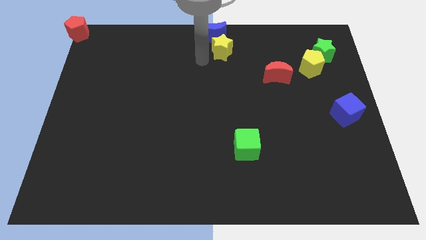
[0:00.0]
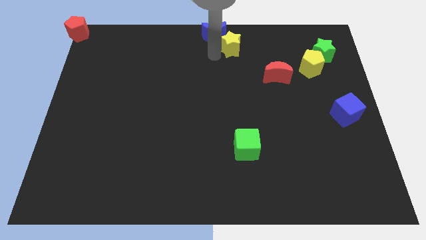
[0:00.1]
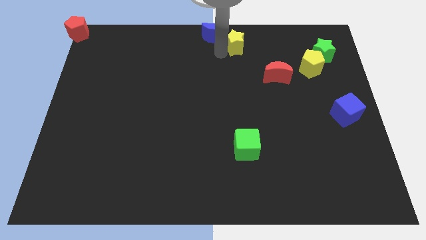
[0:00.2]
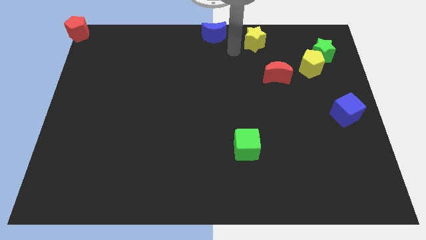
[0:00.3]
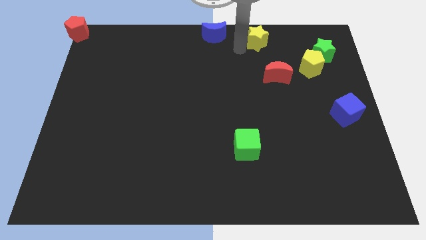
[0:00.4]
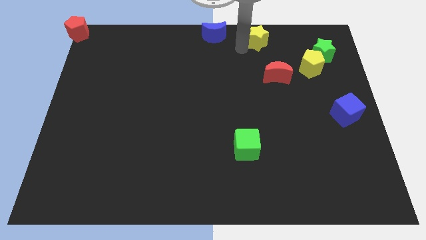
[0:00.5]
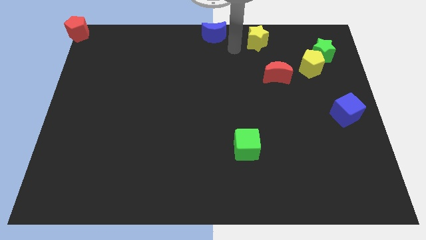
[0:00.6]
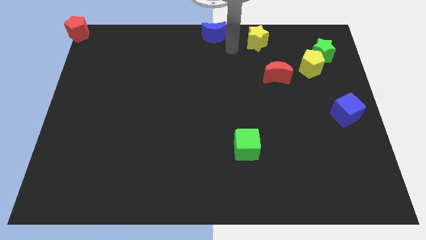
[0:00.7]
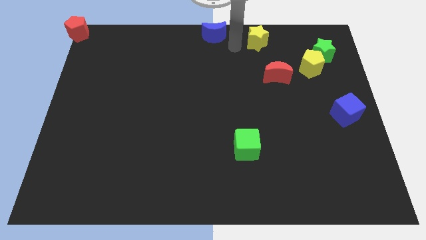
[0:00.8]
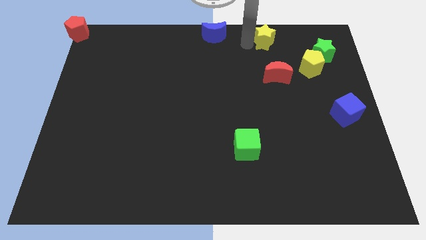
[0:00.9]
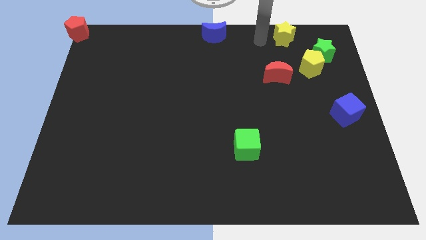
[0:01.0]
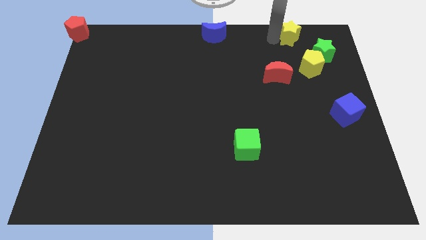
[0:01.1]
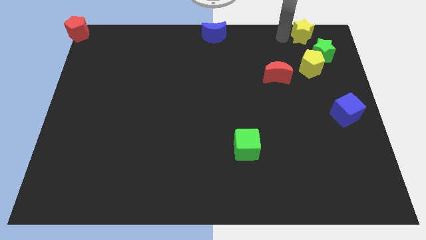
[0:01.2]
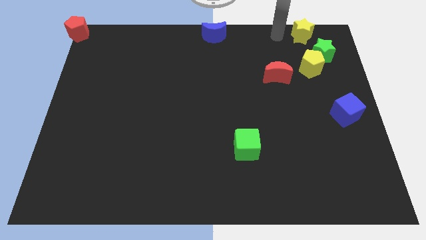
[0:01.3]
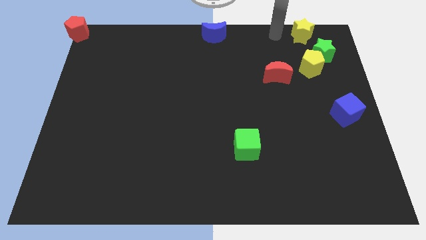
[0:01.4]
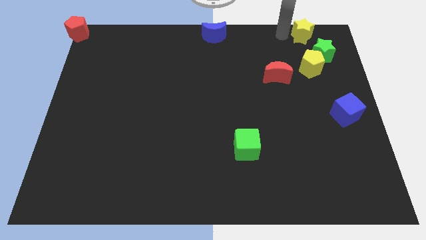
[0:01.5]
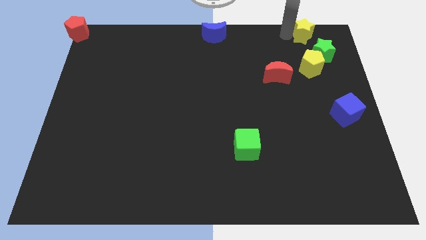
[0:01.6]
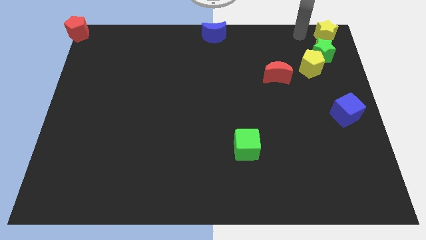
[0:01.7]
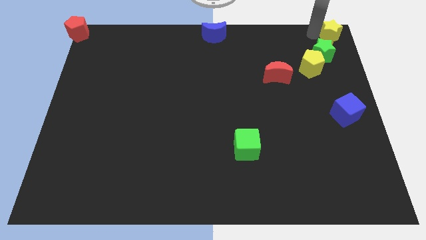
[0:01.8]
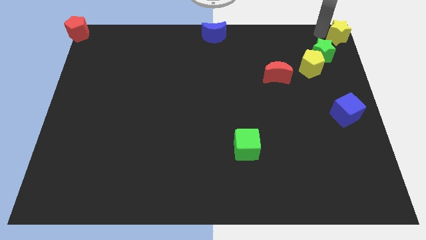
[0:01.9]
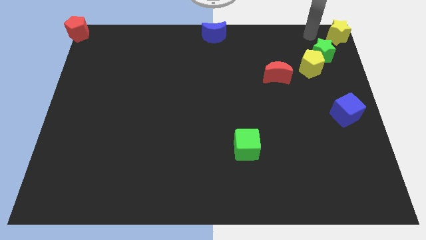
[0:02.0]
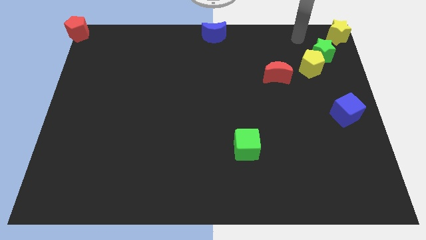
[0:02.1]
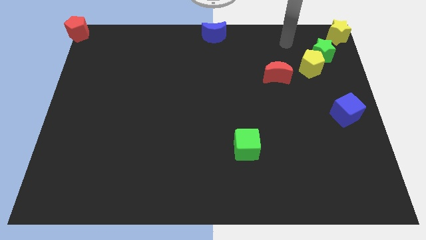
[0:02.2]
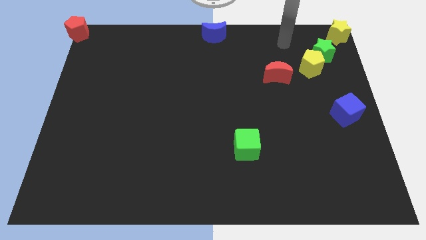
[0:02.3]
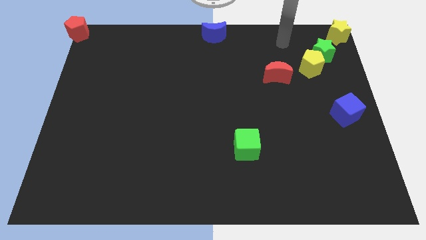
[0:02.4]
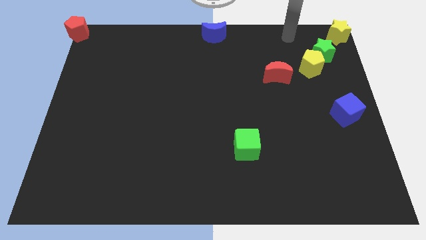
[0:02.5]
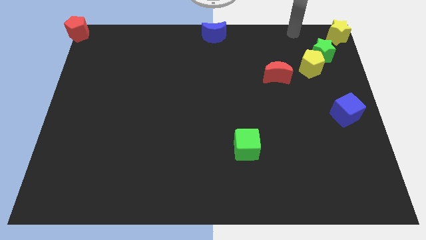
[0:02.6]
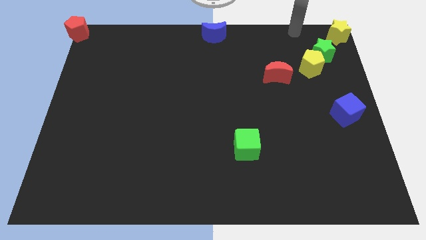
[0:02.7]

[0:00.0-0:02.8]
place yellow star at right top corner of the board

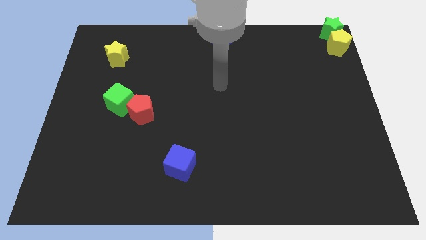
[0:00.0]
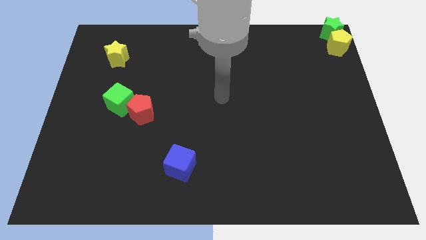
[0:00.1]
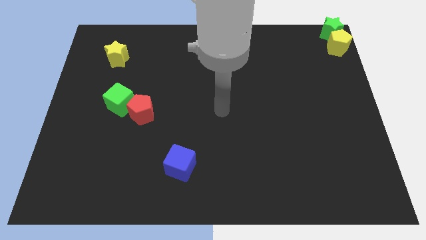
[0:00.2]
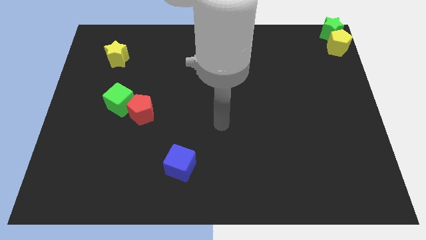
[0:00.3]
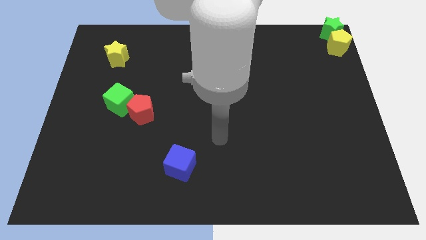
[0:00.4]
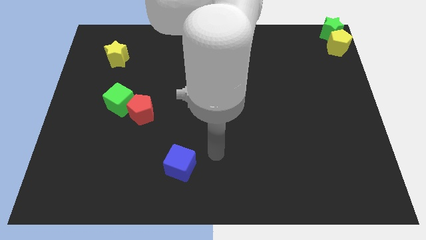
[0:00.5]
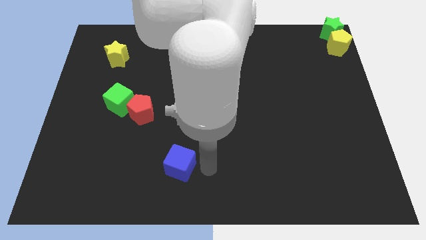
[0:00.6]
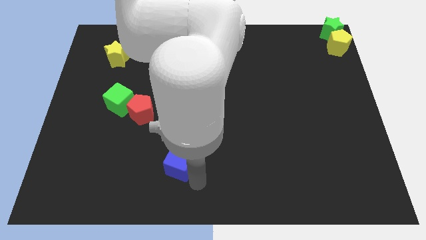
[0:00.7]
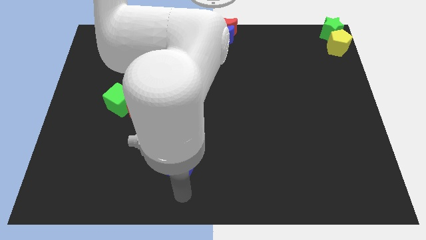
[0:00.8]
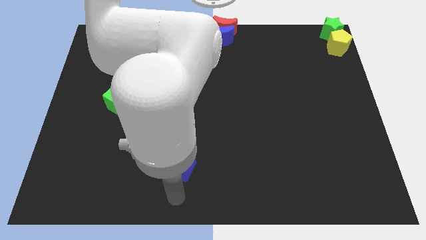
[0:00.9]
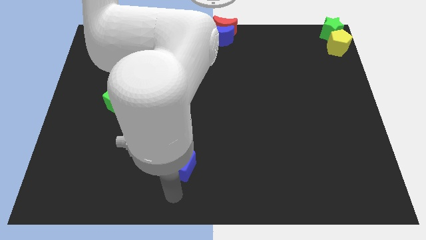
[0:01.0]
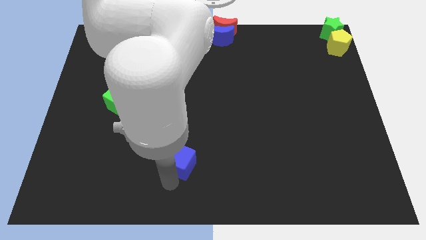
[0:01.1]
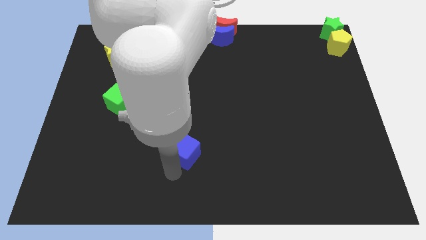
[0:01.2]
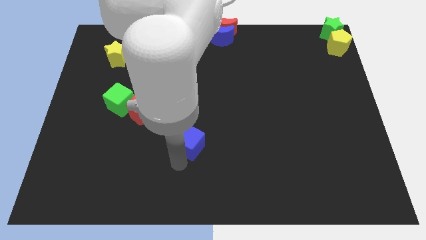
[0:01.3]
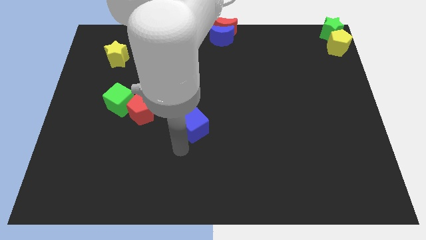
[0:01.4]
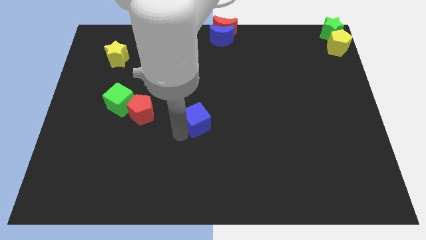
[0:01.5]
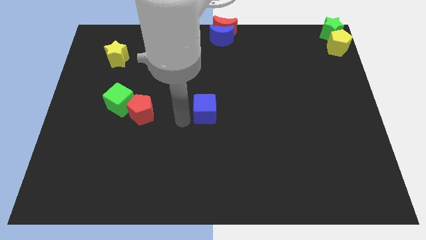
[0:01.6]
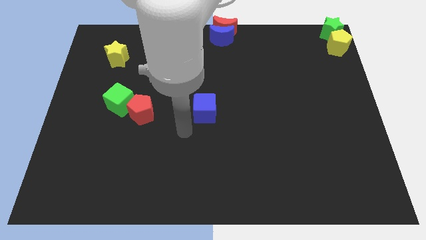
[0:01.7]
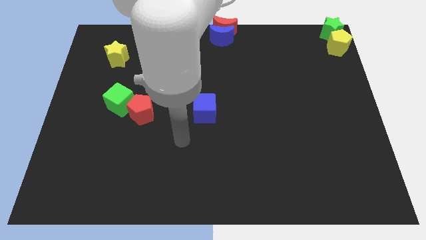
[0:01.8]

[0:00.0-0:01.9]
move the blue cube horizontally to the right side of the red pentagon

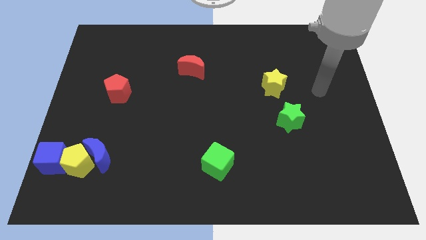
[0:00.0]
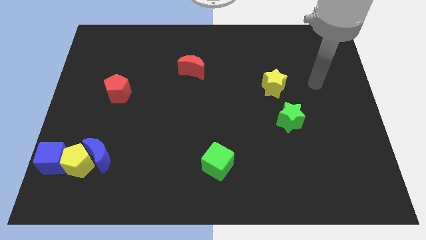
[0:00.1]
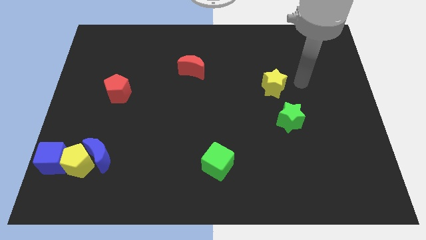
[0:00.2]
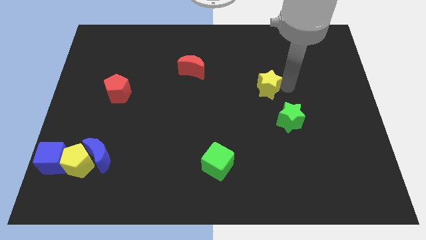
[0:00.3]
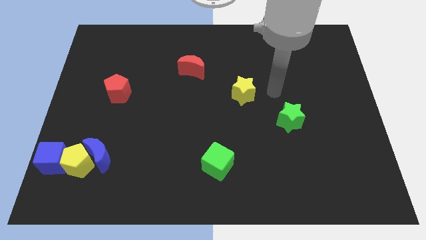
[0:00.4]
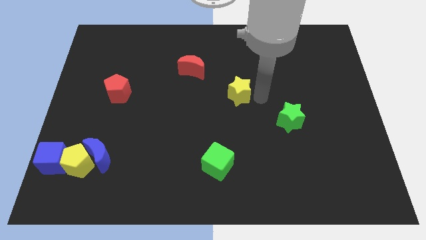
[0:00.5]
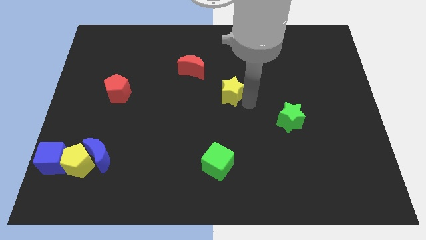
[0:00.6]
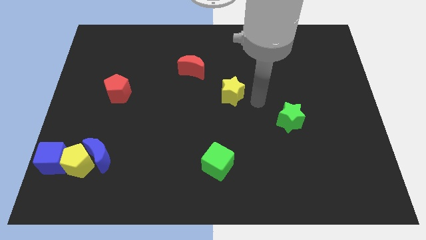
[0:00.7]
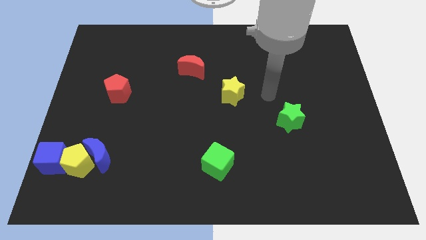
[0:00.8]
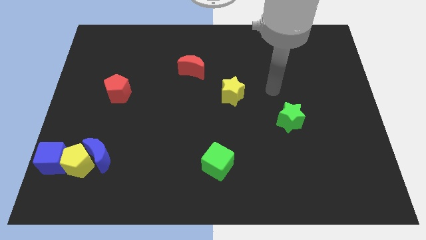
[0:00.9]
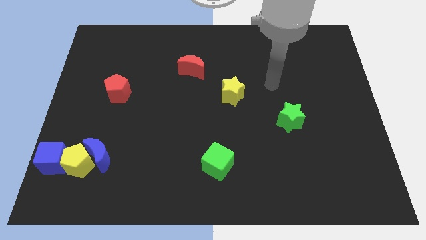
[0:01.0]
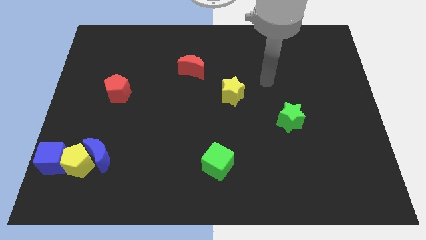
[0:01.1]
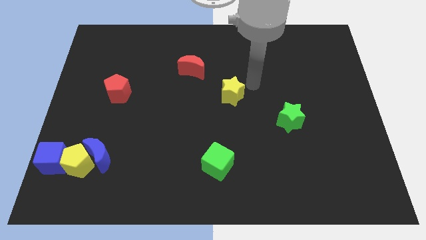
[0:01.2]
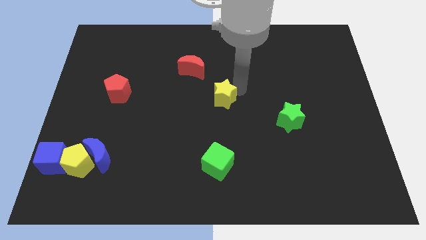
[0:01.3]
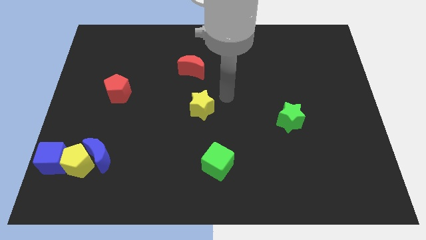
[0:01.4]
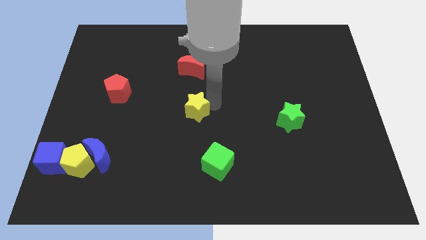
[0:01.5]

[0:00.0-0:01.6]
place the yellow star at the center

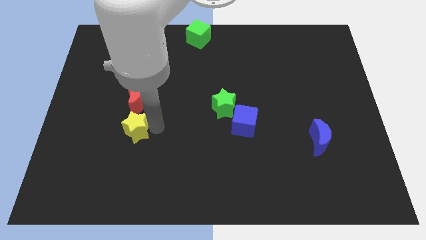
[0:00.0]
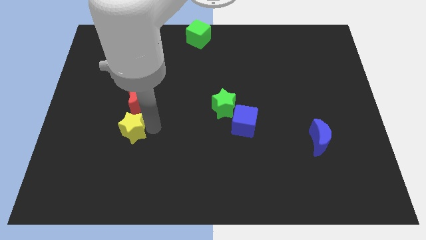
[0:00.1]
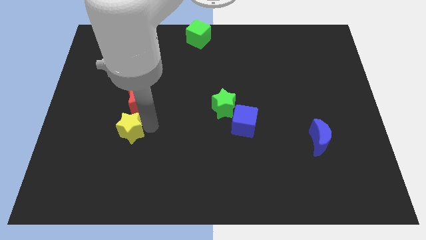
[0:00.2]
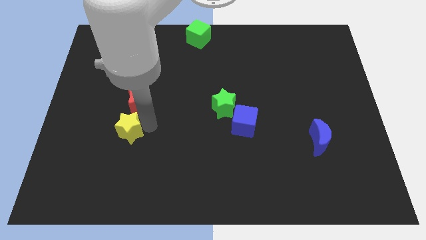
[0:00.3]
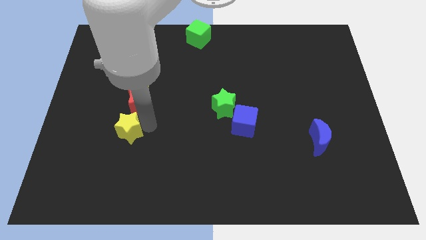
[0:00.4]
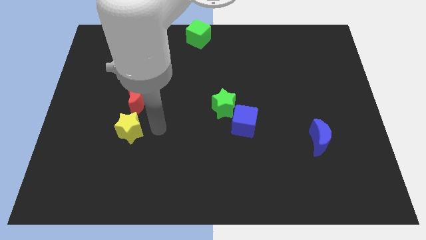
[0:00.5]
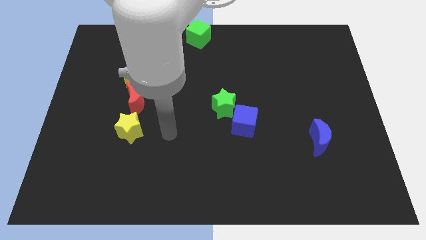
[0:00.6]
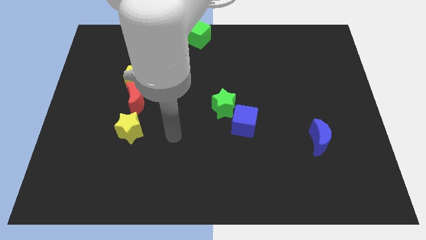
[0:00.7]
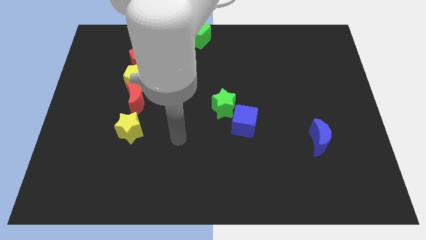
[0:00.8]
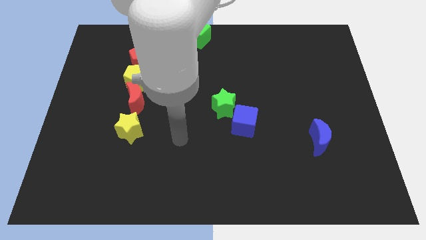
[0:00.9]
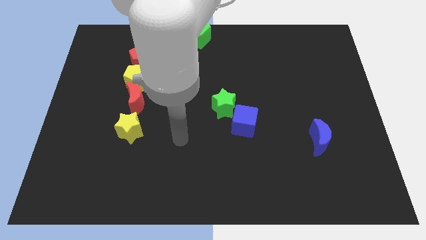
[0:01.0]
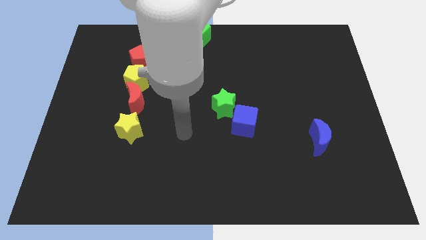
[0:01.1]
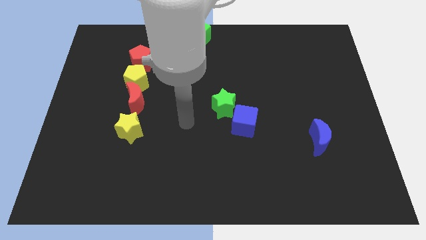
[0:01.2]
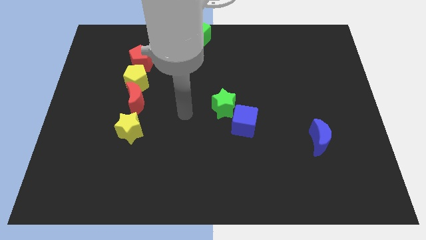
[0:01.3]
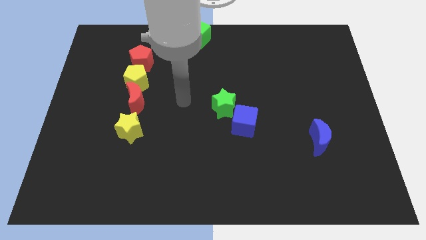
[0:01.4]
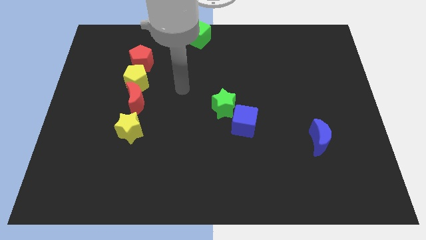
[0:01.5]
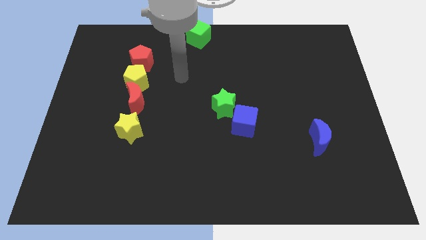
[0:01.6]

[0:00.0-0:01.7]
place yourself away from the yellow star

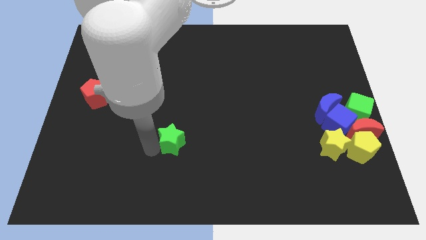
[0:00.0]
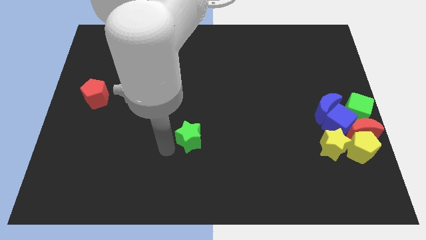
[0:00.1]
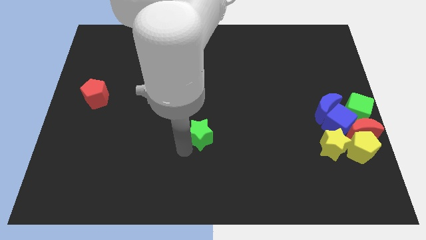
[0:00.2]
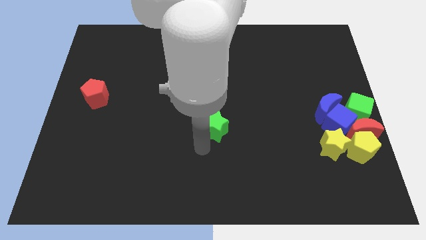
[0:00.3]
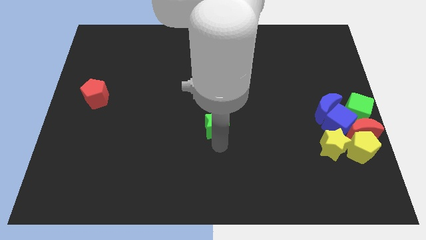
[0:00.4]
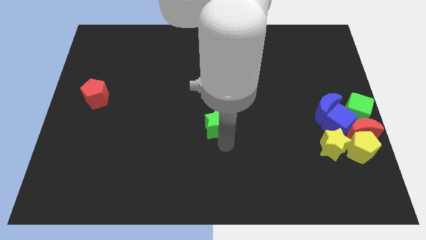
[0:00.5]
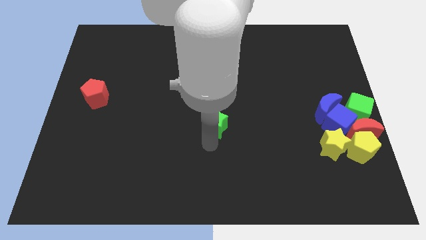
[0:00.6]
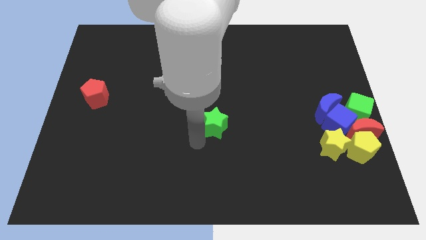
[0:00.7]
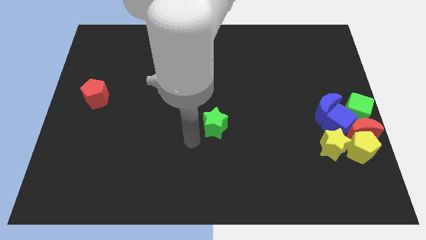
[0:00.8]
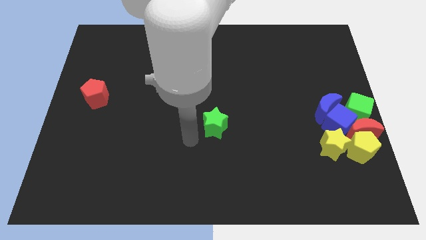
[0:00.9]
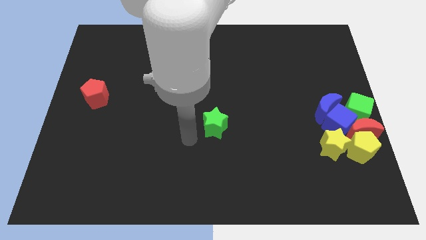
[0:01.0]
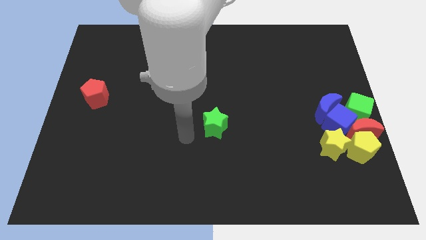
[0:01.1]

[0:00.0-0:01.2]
place the green star to the center

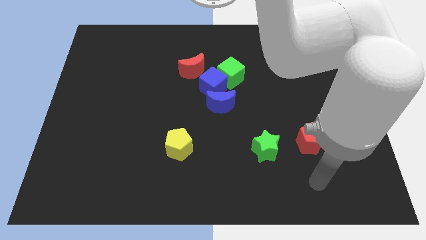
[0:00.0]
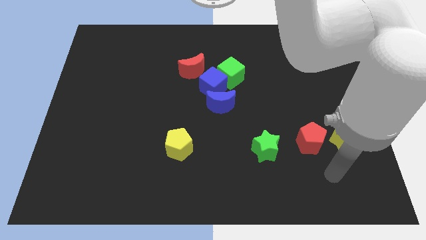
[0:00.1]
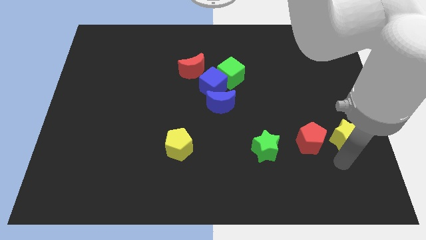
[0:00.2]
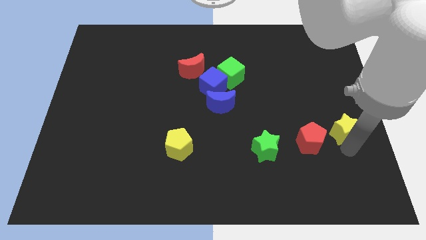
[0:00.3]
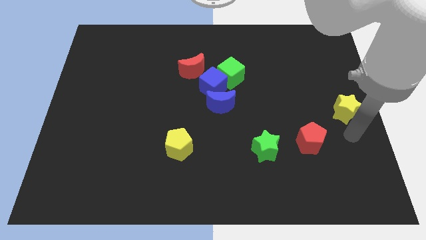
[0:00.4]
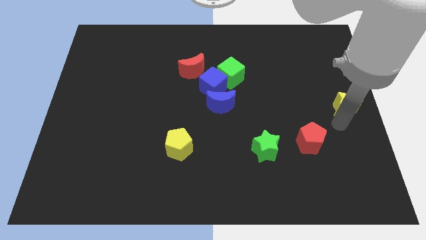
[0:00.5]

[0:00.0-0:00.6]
separate the yellow star from the red pentagon
